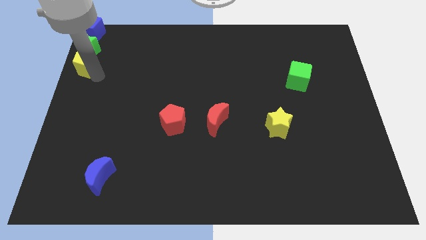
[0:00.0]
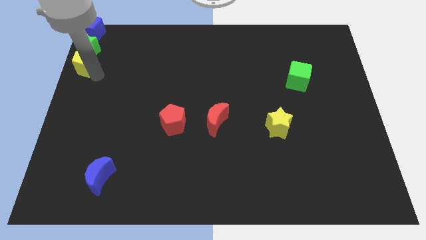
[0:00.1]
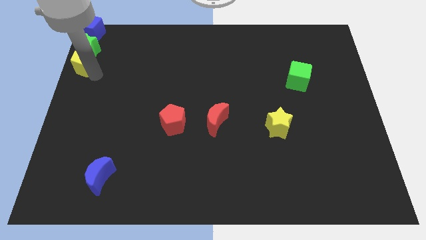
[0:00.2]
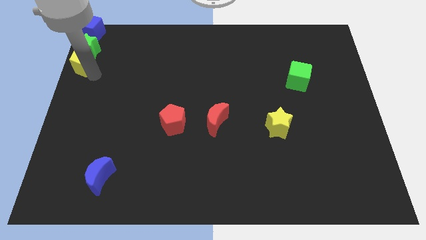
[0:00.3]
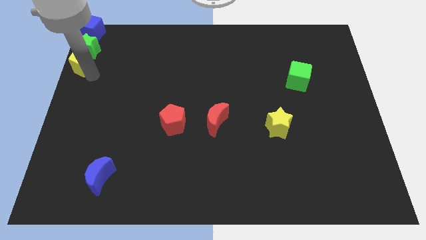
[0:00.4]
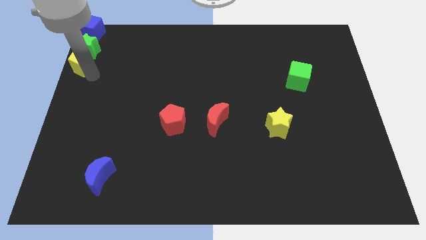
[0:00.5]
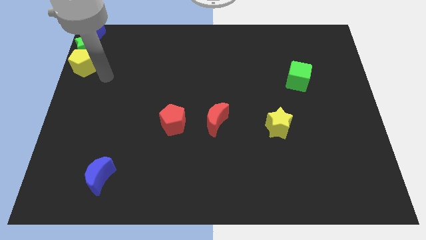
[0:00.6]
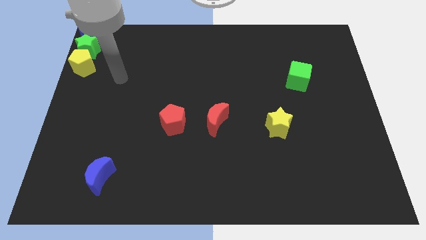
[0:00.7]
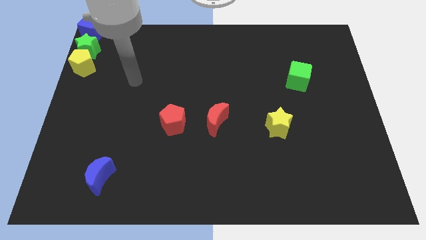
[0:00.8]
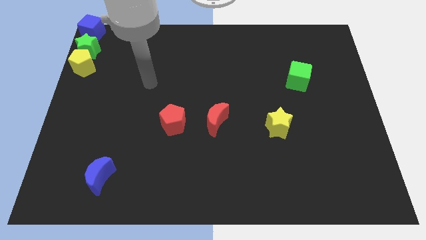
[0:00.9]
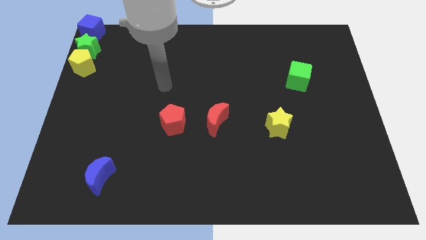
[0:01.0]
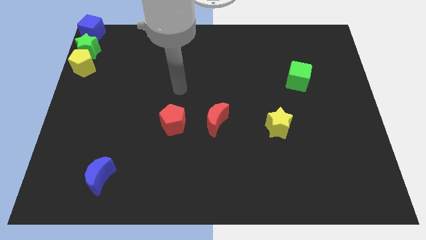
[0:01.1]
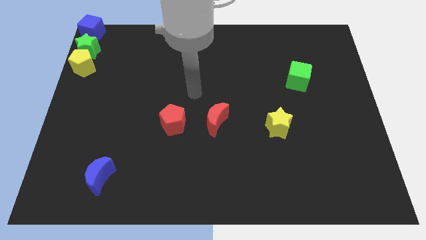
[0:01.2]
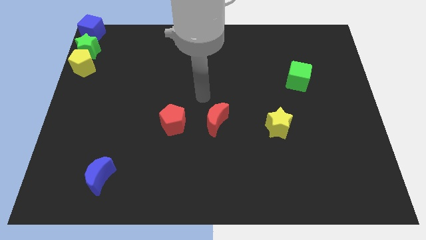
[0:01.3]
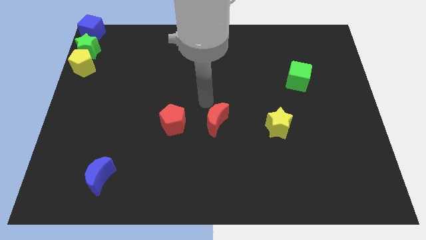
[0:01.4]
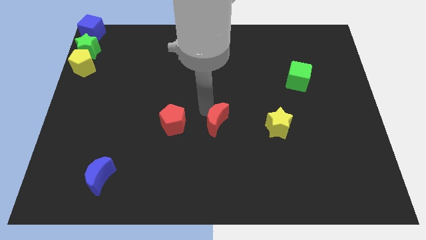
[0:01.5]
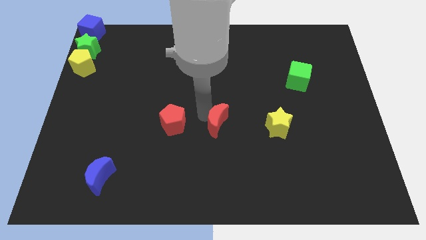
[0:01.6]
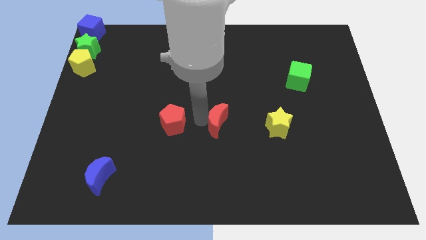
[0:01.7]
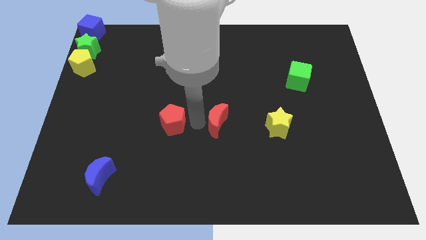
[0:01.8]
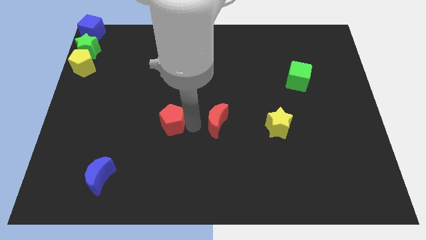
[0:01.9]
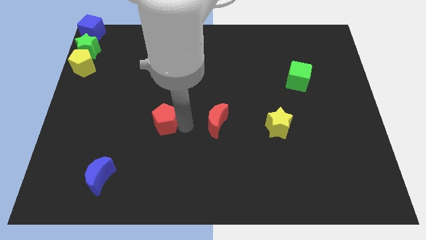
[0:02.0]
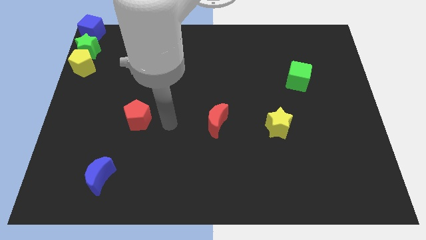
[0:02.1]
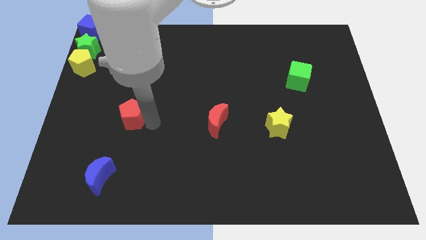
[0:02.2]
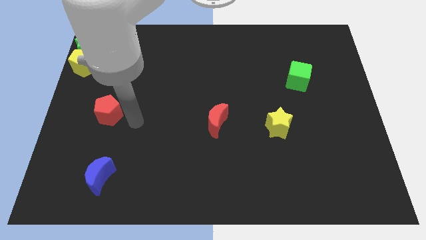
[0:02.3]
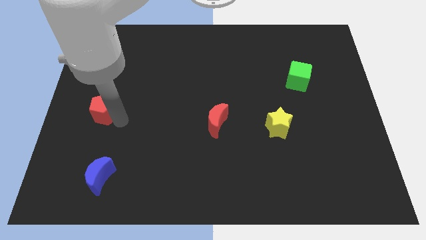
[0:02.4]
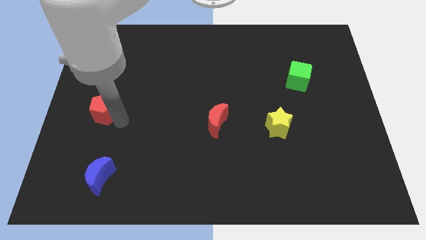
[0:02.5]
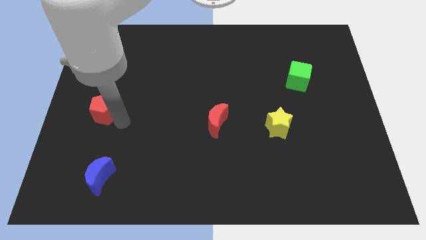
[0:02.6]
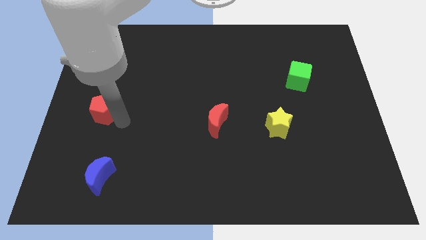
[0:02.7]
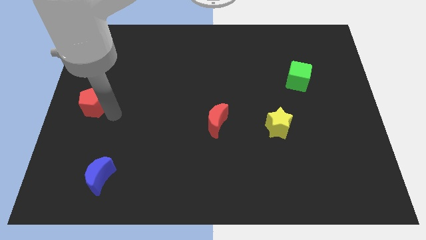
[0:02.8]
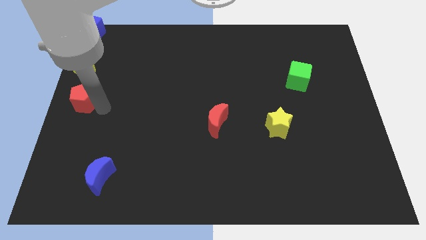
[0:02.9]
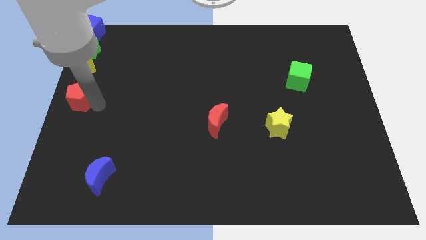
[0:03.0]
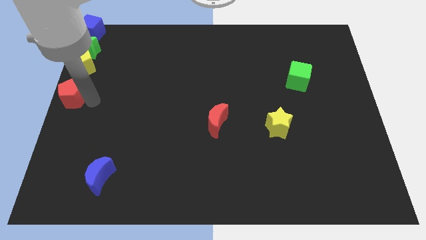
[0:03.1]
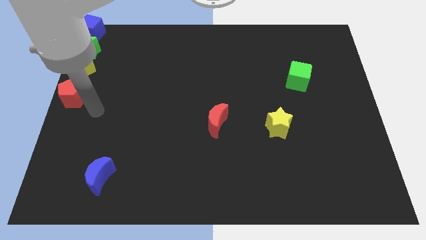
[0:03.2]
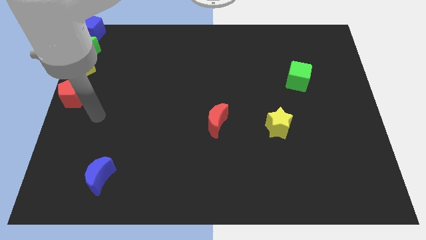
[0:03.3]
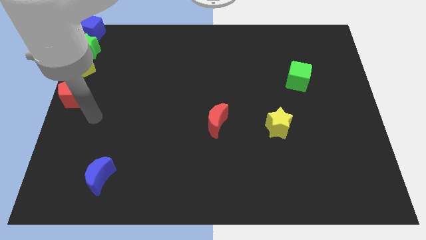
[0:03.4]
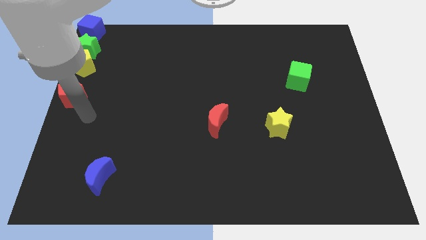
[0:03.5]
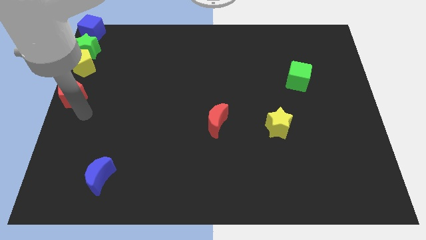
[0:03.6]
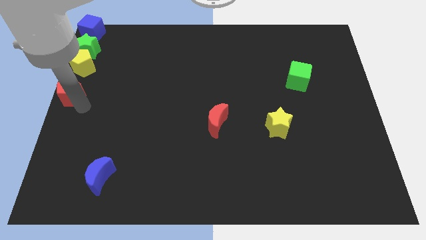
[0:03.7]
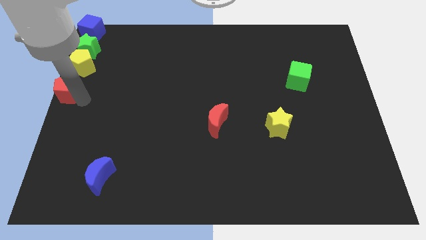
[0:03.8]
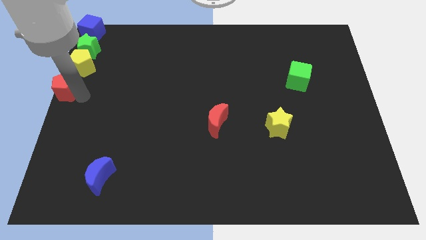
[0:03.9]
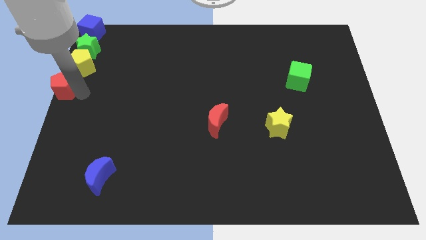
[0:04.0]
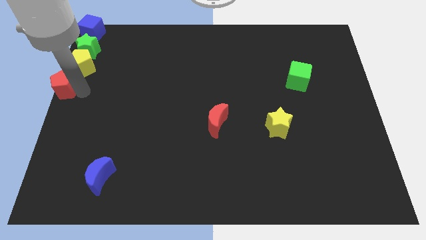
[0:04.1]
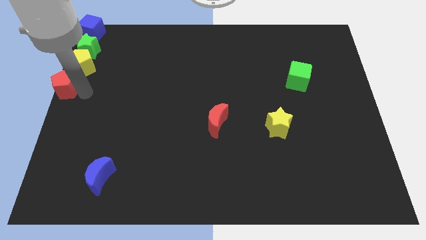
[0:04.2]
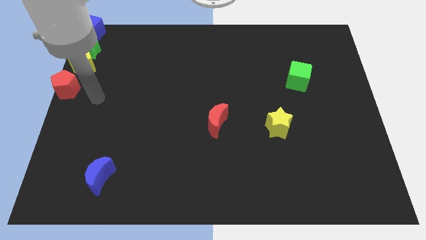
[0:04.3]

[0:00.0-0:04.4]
place red pentagon below yellow pentagon

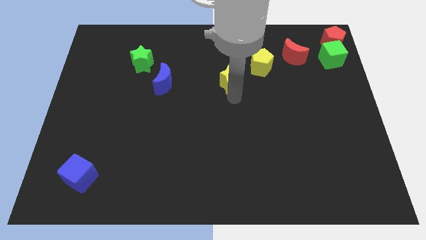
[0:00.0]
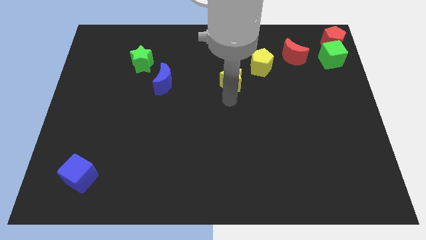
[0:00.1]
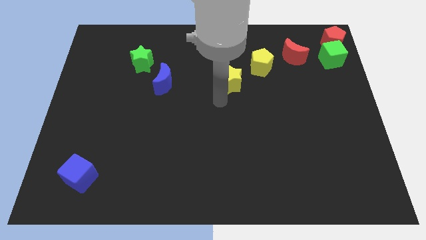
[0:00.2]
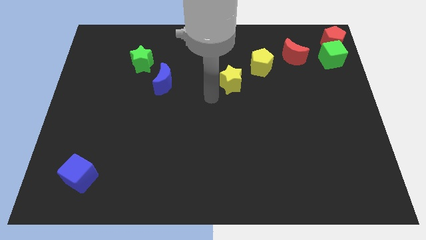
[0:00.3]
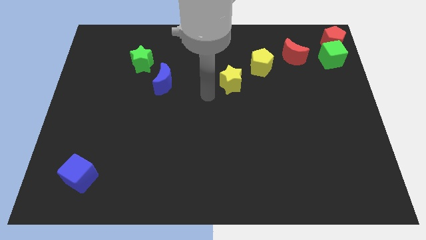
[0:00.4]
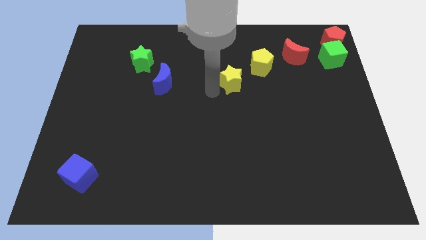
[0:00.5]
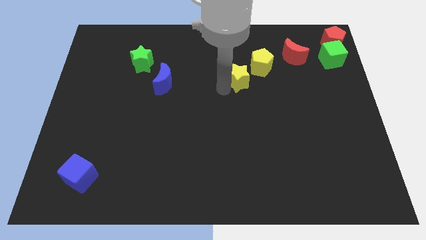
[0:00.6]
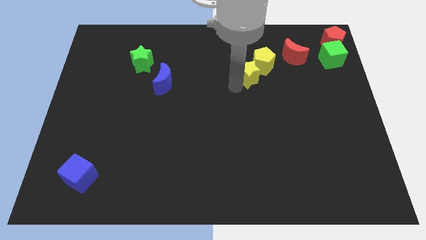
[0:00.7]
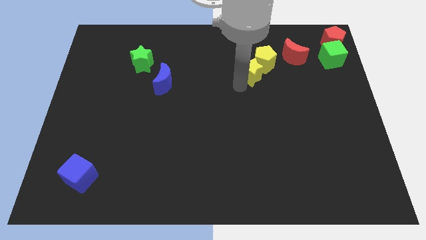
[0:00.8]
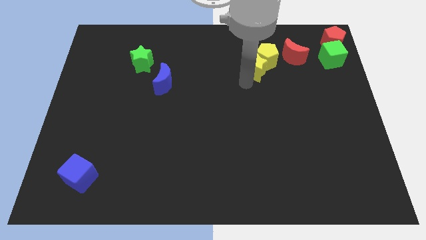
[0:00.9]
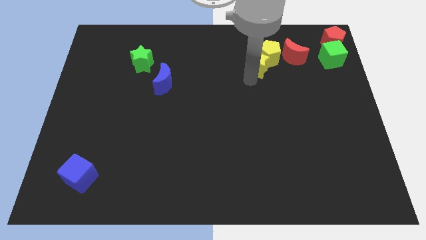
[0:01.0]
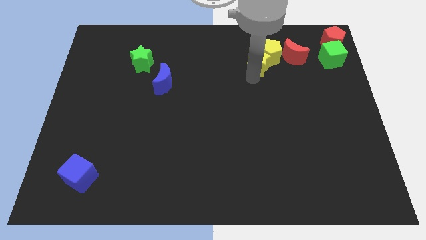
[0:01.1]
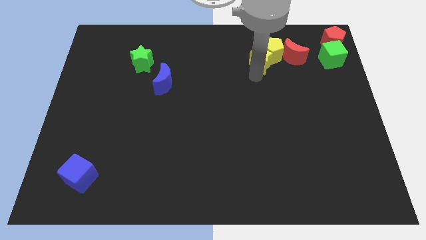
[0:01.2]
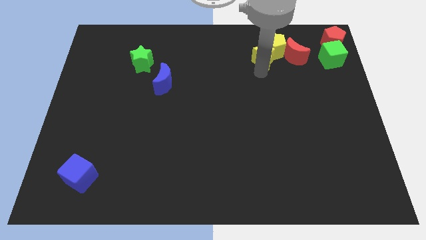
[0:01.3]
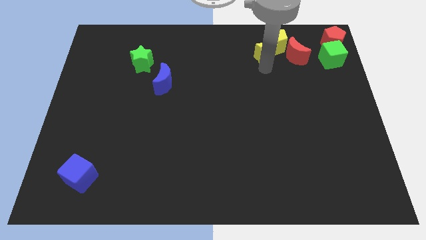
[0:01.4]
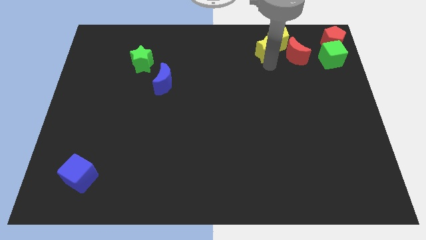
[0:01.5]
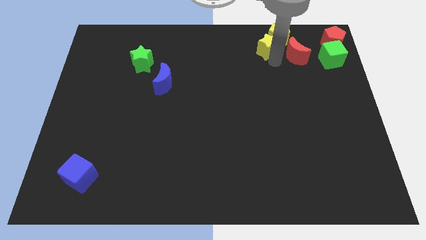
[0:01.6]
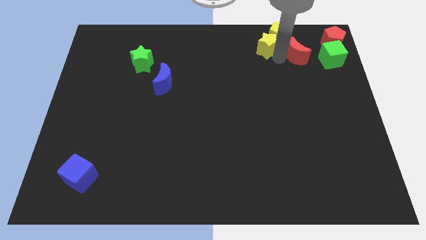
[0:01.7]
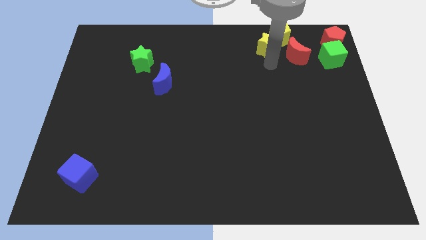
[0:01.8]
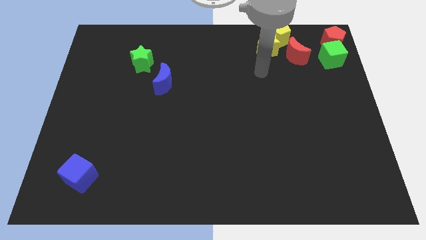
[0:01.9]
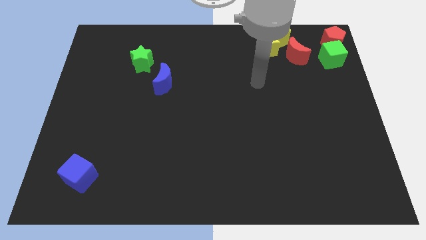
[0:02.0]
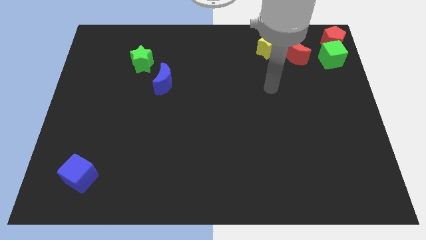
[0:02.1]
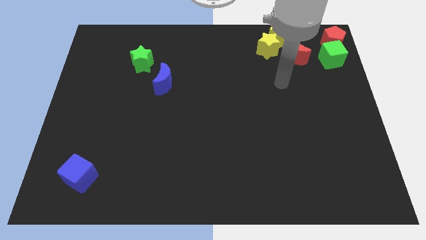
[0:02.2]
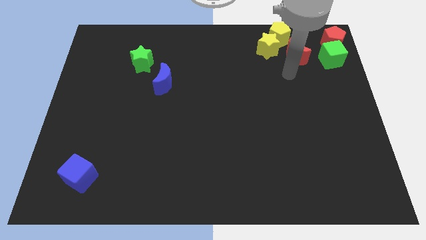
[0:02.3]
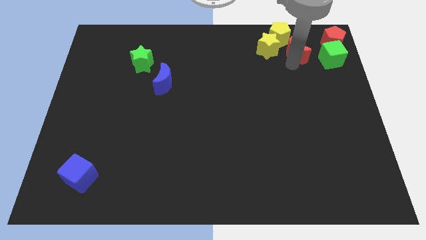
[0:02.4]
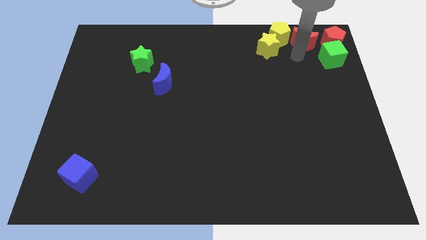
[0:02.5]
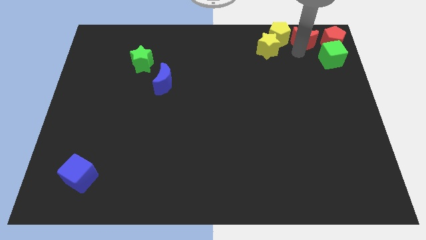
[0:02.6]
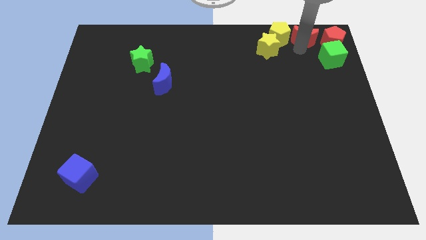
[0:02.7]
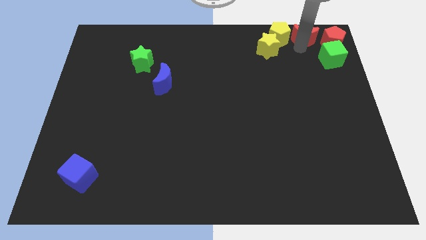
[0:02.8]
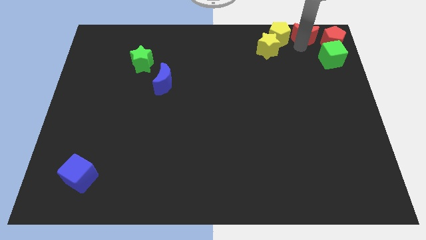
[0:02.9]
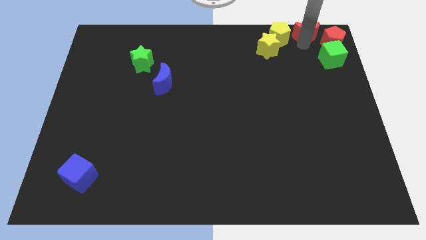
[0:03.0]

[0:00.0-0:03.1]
move the yellow blocks and the red crescent towards the top right corner

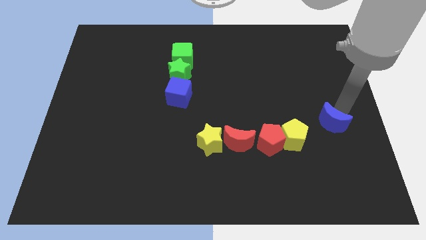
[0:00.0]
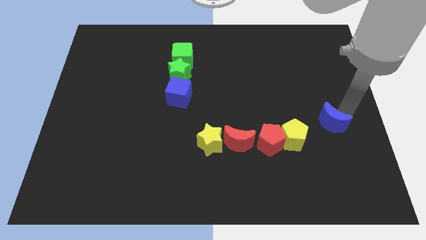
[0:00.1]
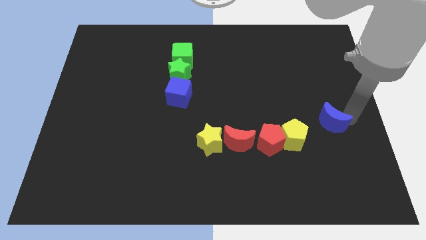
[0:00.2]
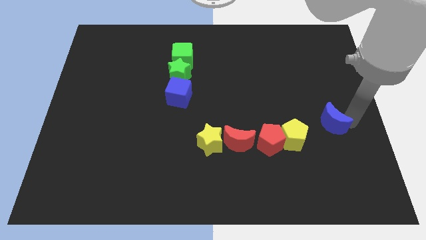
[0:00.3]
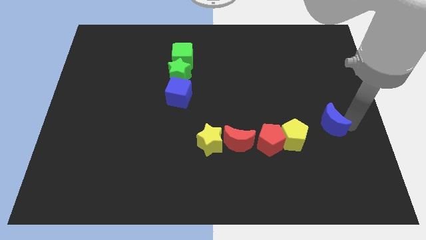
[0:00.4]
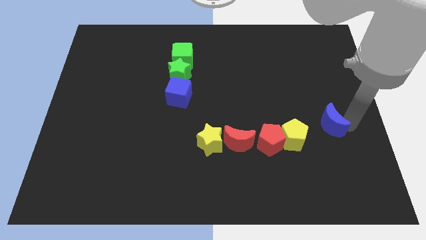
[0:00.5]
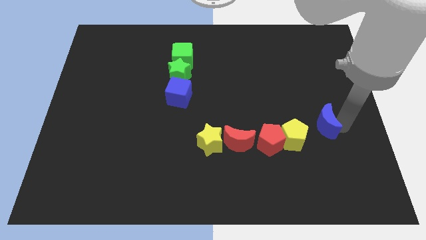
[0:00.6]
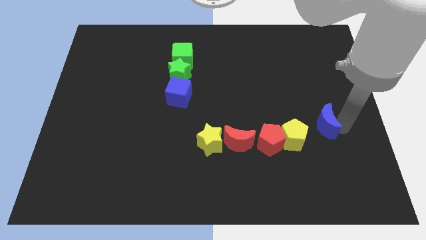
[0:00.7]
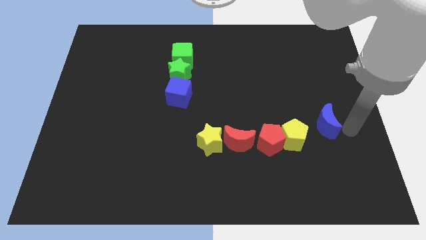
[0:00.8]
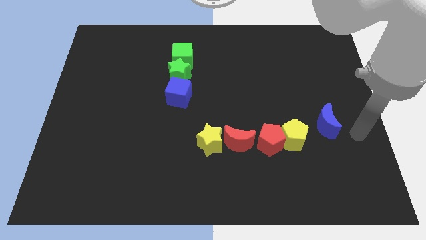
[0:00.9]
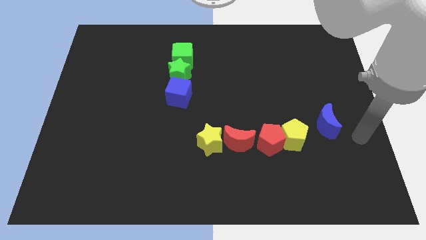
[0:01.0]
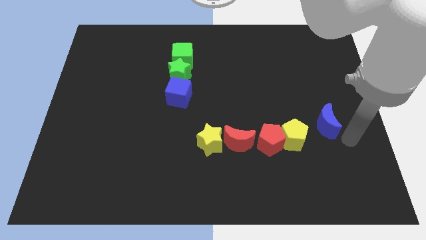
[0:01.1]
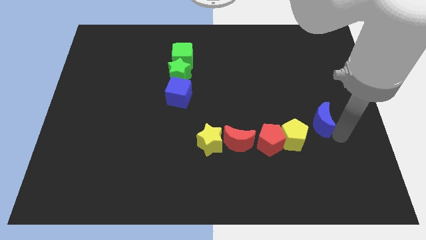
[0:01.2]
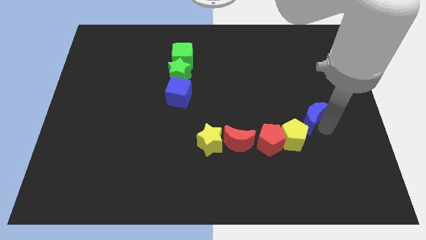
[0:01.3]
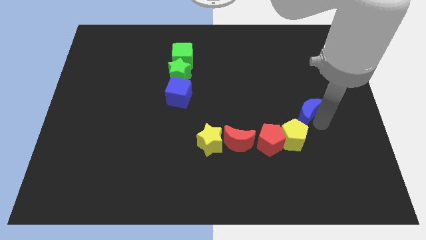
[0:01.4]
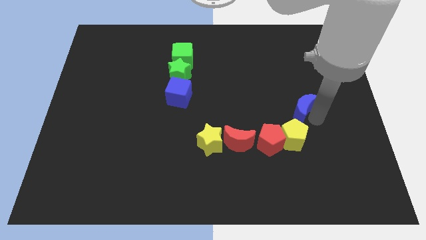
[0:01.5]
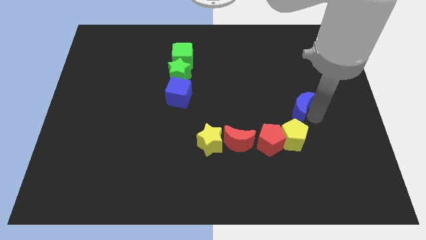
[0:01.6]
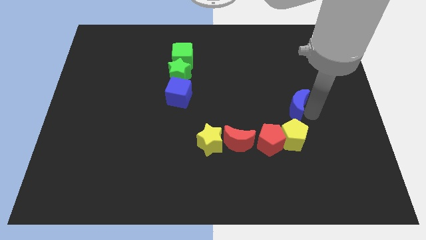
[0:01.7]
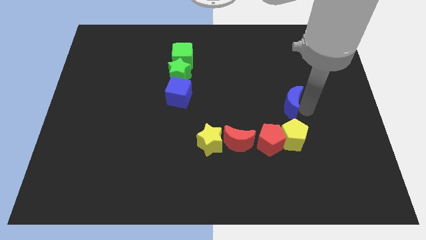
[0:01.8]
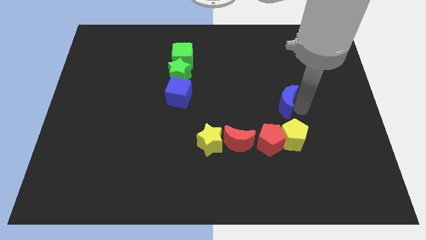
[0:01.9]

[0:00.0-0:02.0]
put the blue moon at the top side of the yellow pentagon
